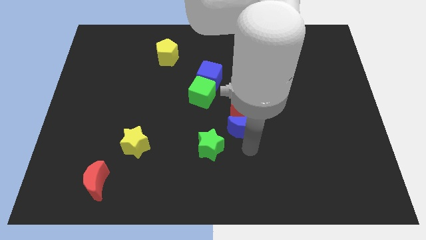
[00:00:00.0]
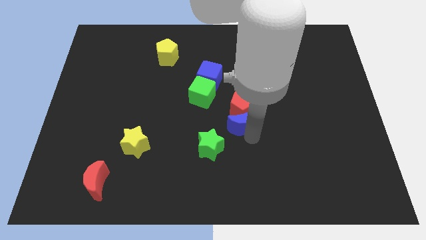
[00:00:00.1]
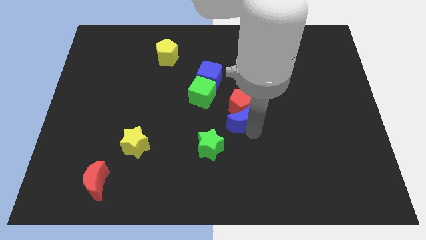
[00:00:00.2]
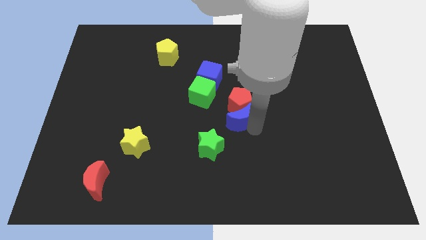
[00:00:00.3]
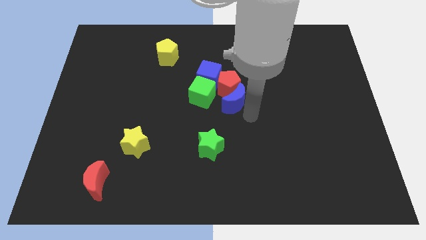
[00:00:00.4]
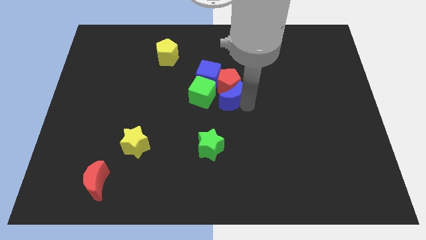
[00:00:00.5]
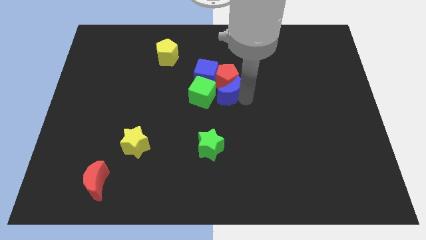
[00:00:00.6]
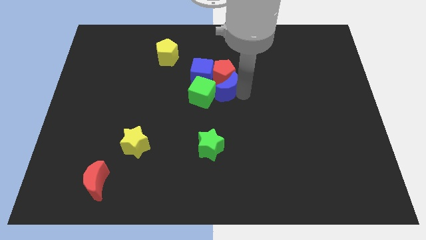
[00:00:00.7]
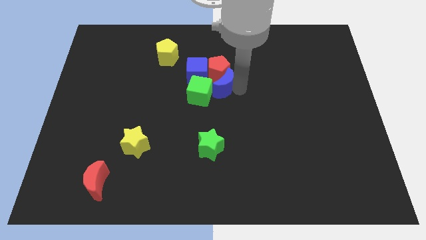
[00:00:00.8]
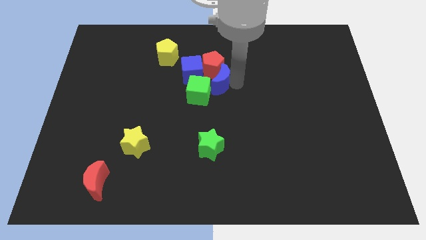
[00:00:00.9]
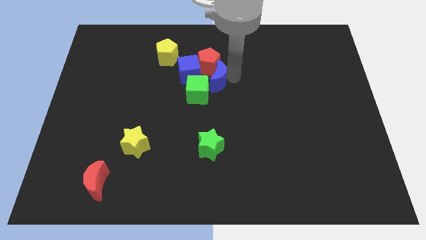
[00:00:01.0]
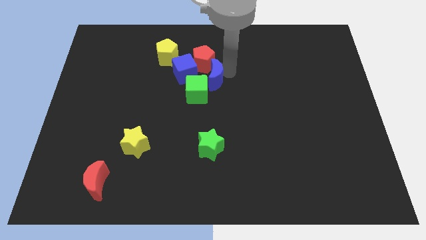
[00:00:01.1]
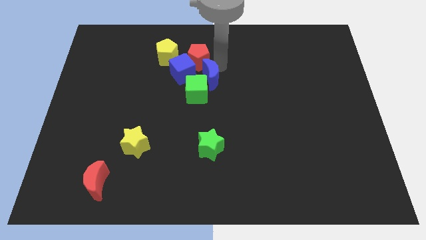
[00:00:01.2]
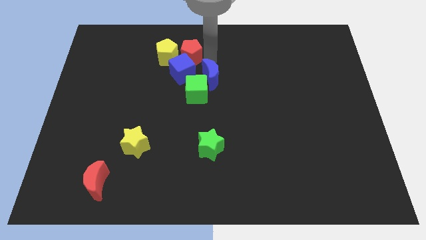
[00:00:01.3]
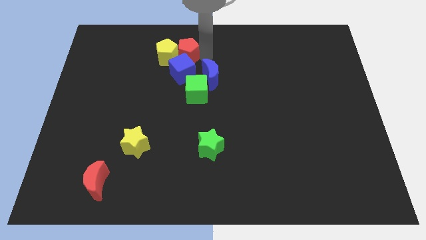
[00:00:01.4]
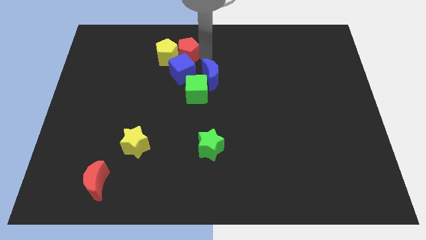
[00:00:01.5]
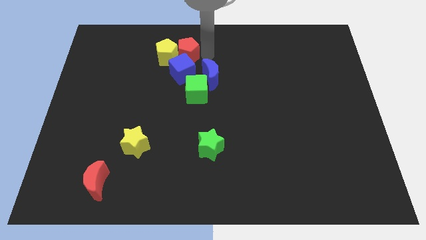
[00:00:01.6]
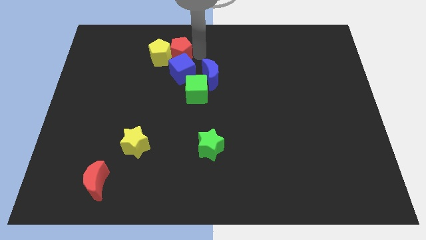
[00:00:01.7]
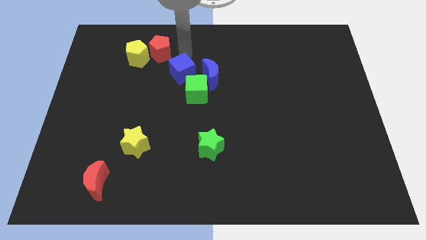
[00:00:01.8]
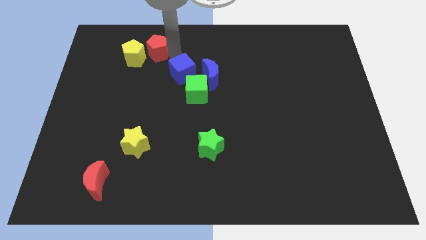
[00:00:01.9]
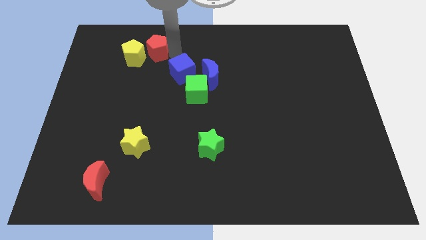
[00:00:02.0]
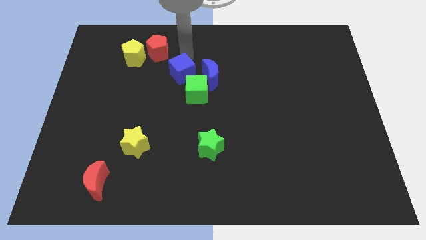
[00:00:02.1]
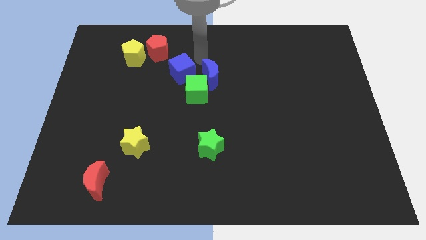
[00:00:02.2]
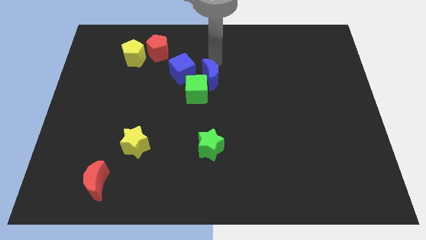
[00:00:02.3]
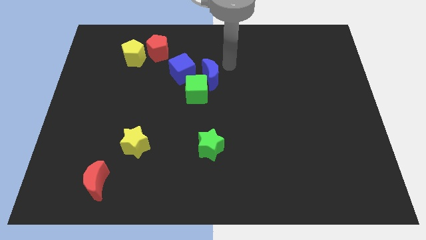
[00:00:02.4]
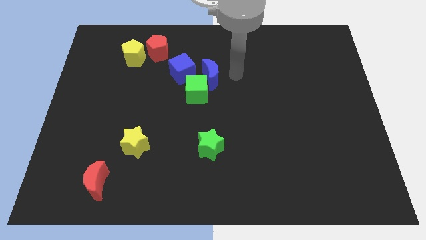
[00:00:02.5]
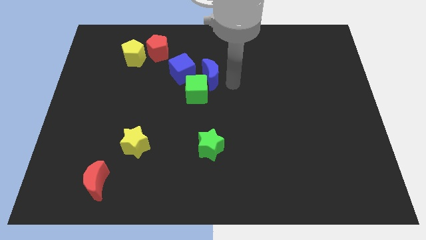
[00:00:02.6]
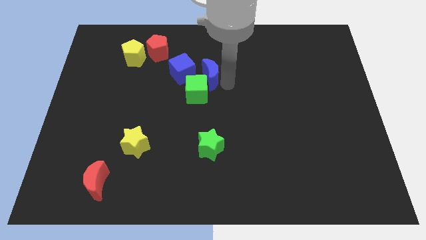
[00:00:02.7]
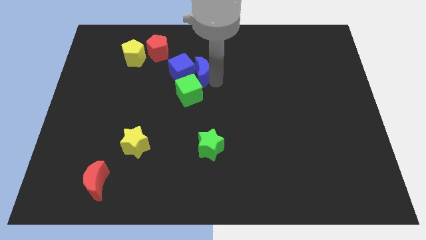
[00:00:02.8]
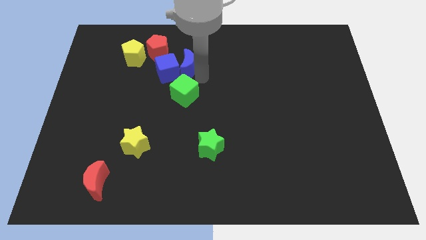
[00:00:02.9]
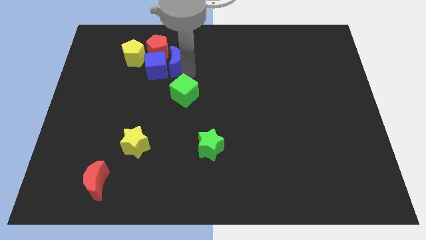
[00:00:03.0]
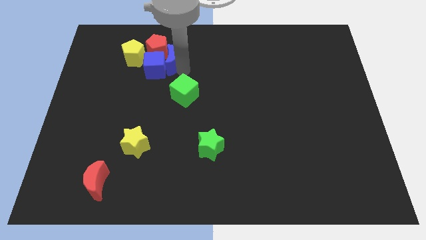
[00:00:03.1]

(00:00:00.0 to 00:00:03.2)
push group of block towards top left side of the board

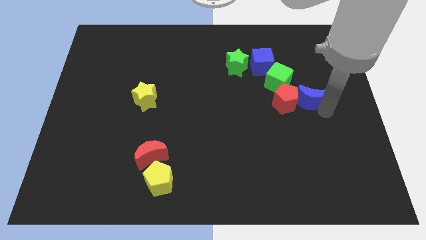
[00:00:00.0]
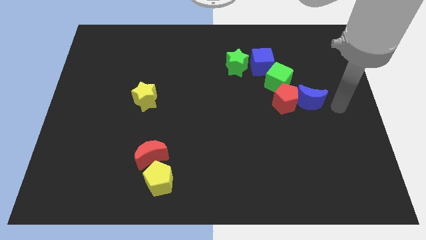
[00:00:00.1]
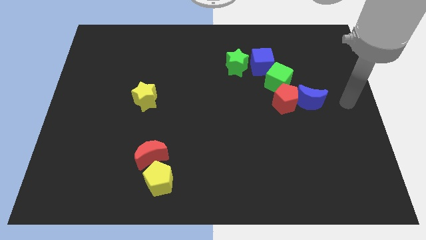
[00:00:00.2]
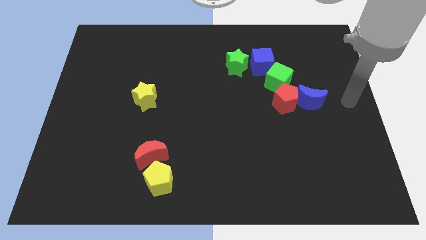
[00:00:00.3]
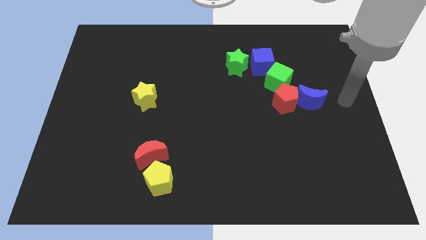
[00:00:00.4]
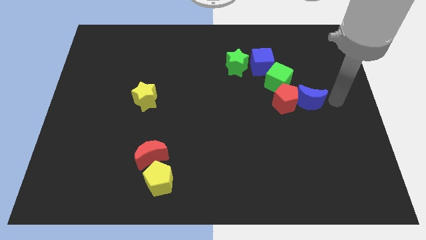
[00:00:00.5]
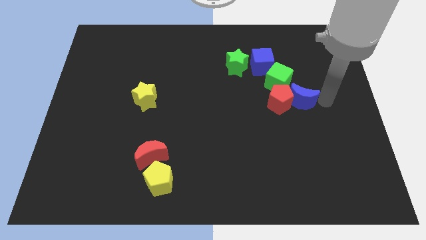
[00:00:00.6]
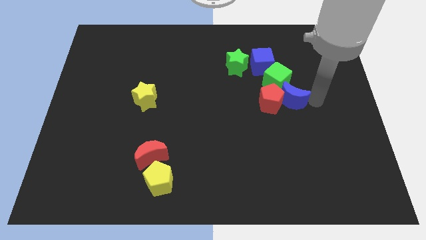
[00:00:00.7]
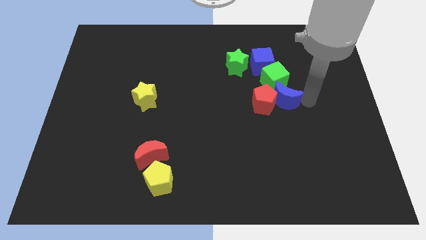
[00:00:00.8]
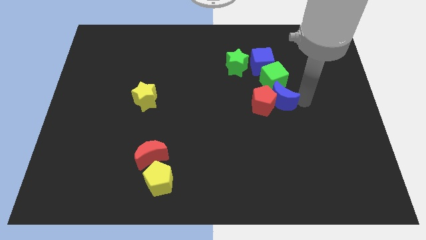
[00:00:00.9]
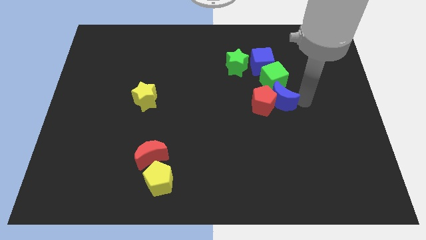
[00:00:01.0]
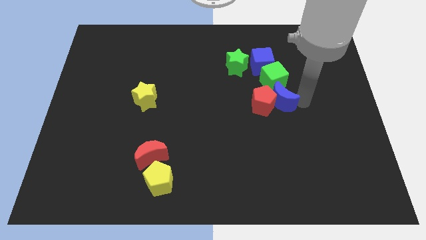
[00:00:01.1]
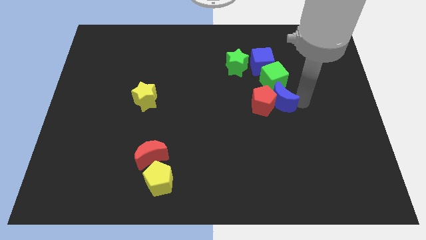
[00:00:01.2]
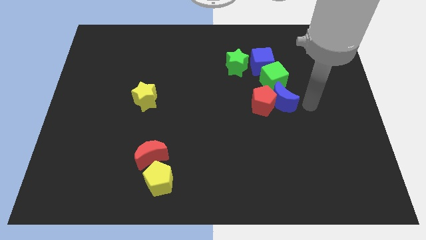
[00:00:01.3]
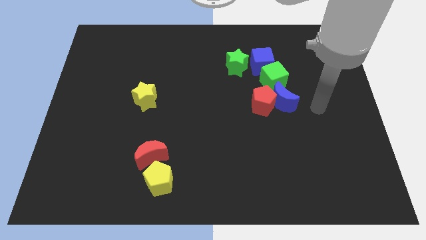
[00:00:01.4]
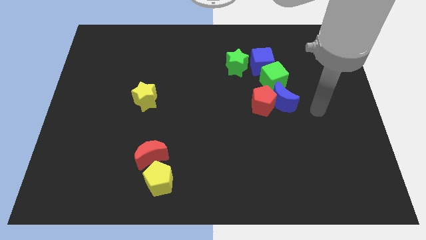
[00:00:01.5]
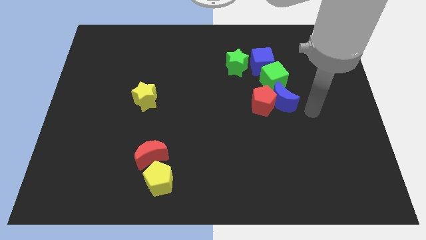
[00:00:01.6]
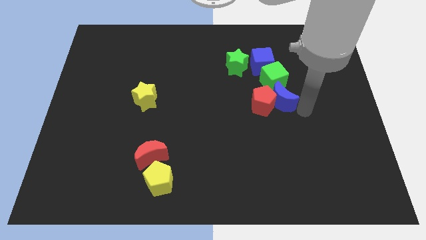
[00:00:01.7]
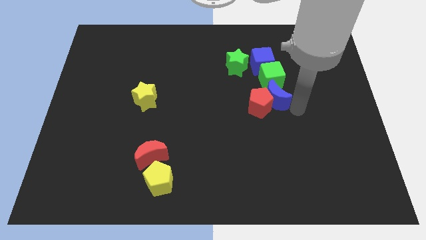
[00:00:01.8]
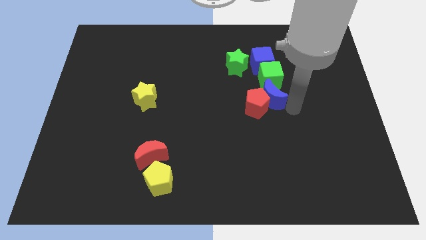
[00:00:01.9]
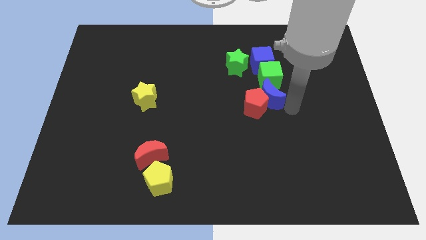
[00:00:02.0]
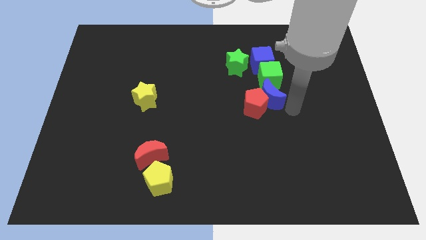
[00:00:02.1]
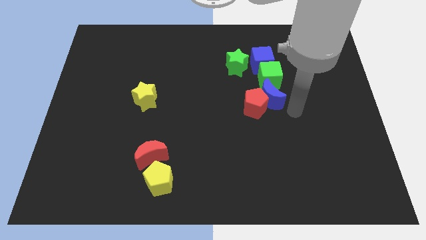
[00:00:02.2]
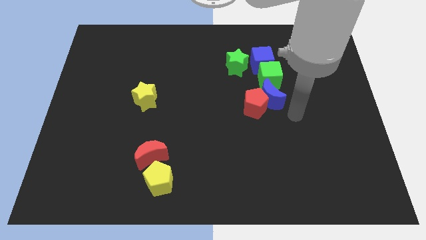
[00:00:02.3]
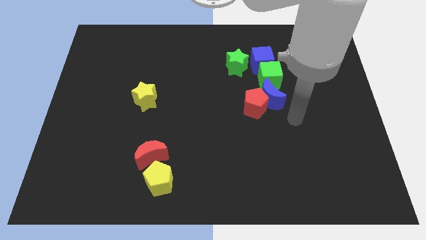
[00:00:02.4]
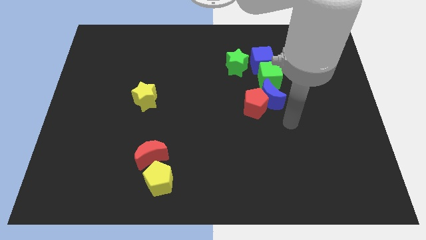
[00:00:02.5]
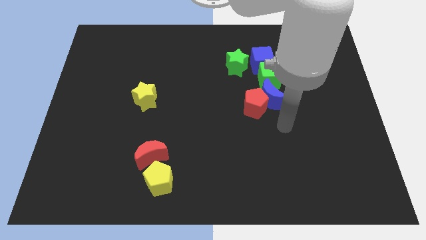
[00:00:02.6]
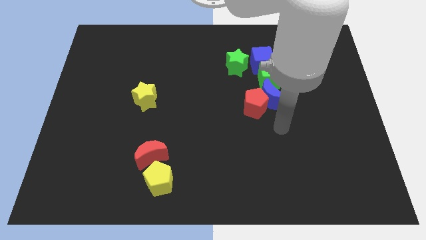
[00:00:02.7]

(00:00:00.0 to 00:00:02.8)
push the blue crescent below the green cube to form a vertical line of blocks

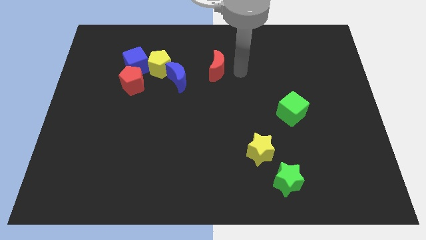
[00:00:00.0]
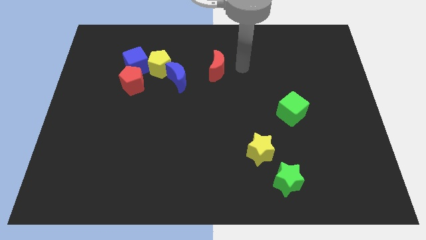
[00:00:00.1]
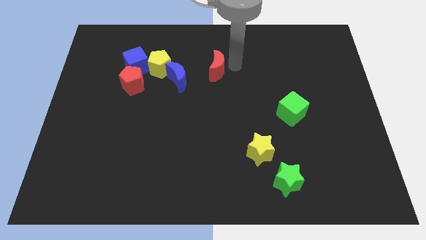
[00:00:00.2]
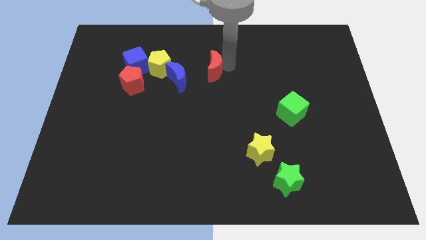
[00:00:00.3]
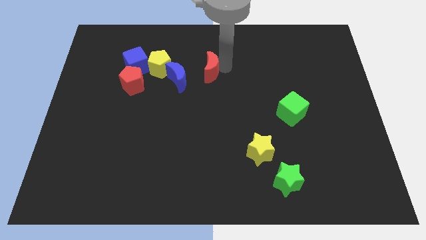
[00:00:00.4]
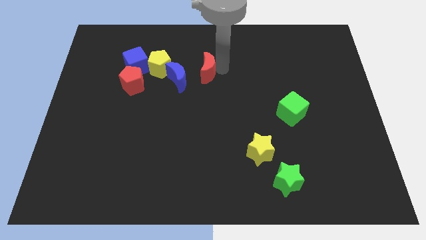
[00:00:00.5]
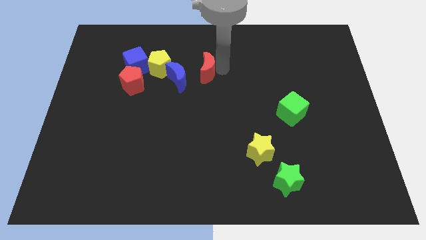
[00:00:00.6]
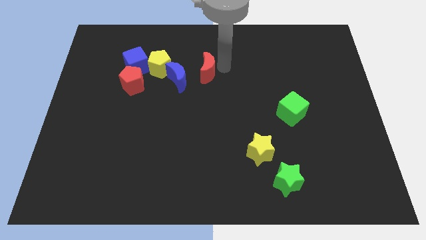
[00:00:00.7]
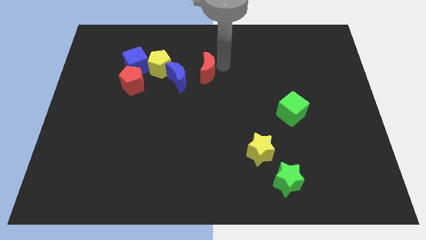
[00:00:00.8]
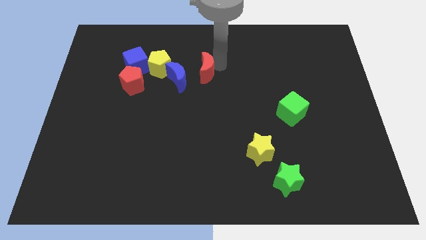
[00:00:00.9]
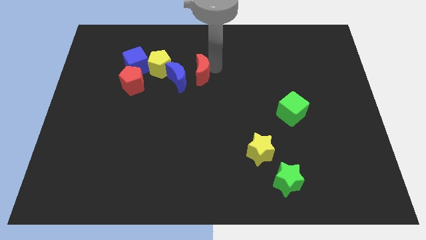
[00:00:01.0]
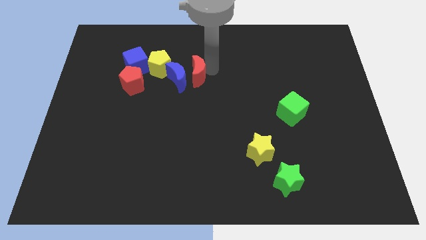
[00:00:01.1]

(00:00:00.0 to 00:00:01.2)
push the red crescent to the right of the blue crescent

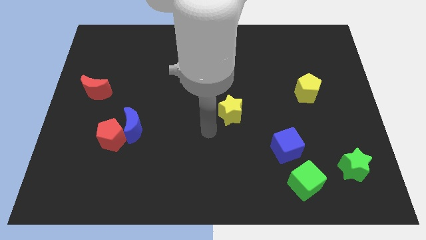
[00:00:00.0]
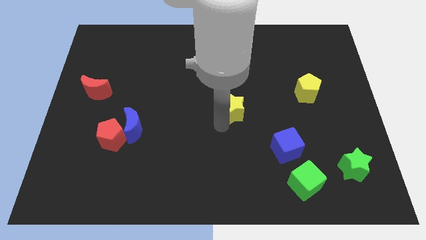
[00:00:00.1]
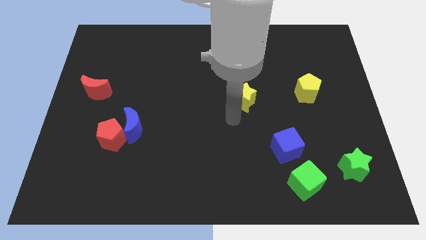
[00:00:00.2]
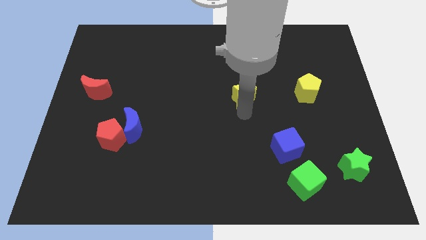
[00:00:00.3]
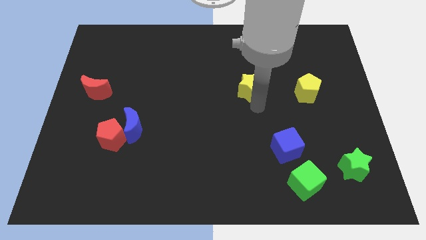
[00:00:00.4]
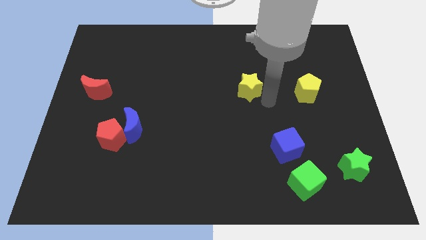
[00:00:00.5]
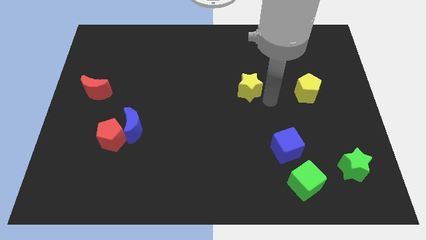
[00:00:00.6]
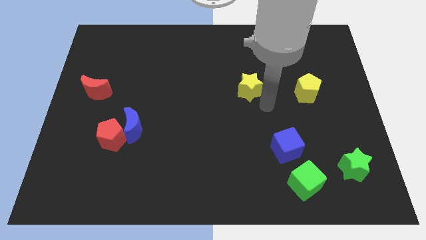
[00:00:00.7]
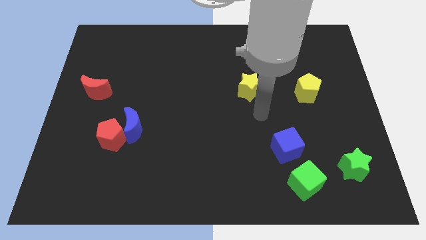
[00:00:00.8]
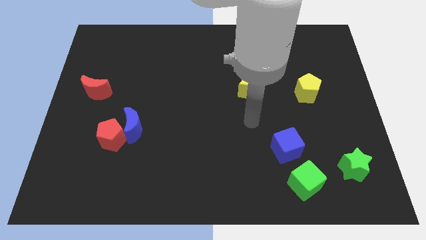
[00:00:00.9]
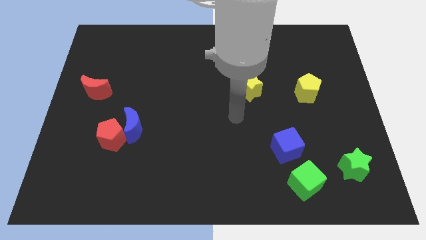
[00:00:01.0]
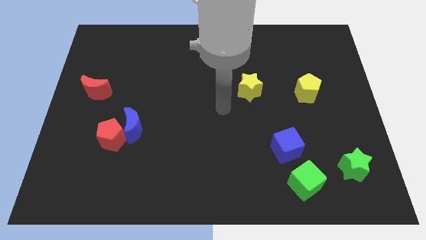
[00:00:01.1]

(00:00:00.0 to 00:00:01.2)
move yellow star left beside the yellow pentagon

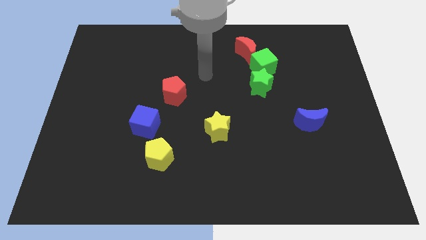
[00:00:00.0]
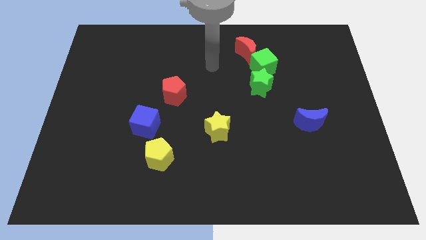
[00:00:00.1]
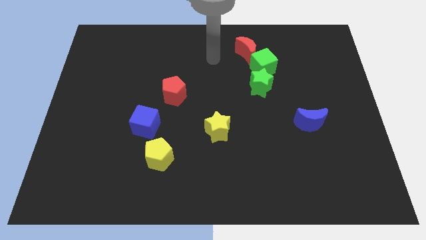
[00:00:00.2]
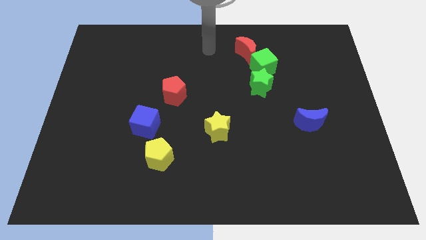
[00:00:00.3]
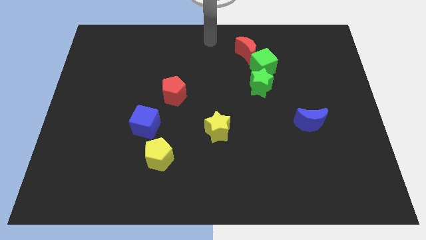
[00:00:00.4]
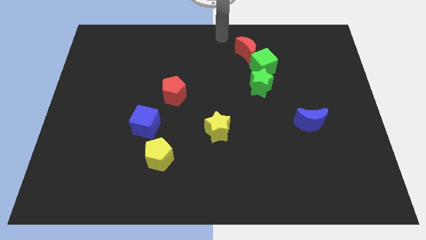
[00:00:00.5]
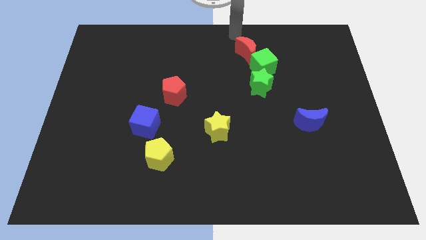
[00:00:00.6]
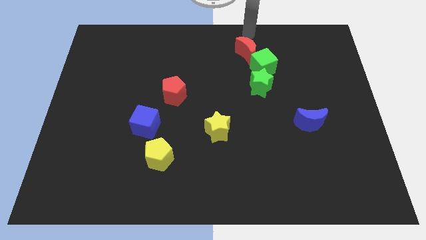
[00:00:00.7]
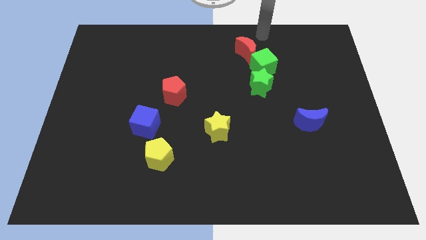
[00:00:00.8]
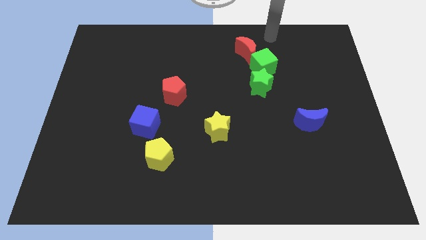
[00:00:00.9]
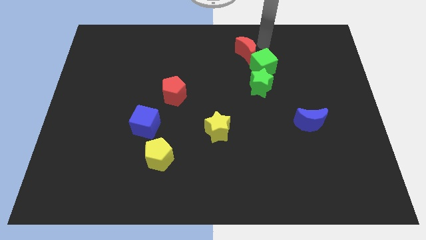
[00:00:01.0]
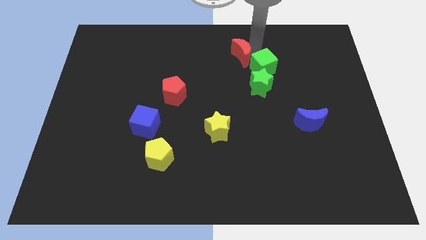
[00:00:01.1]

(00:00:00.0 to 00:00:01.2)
move your arm to the right of red crescent
